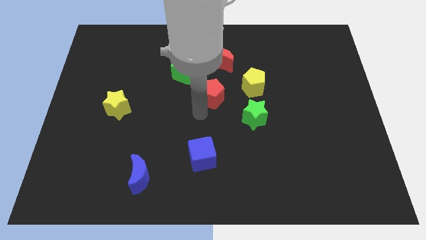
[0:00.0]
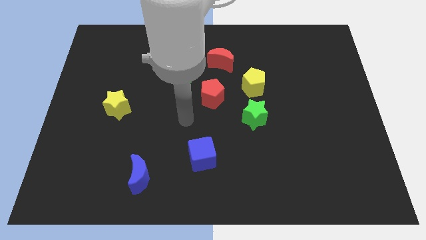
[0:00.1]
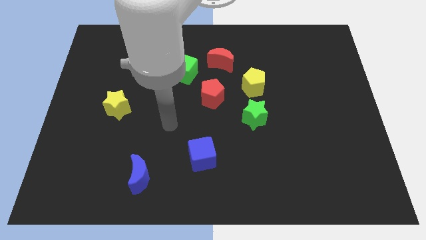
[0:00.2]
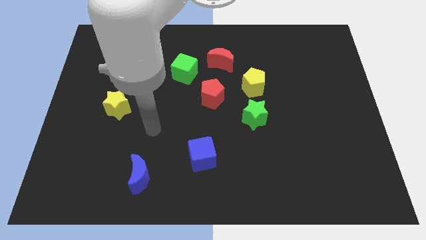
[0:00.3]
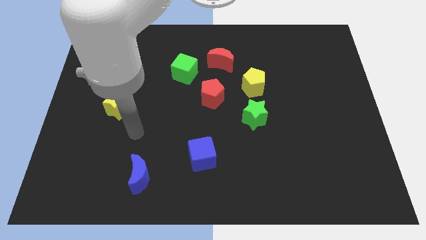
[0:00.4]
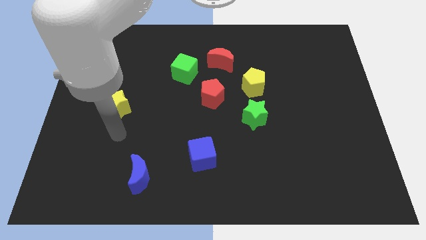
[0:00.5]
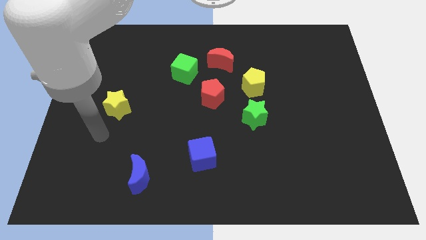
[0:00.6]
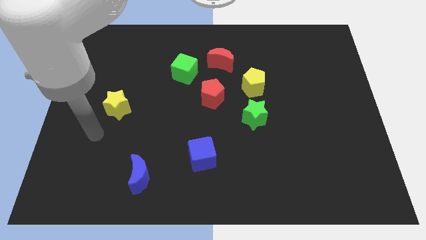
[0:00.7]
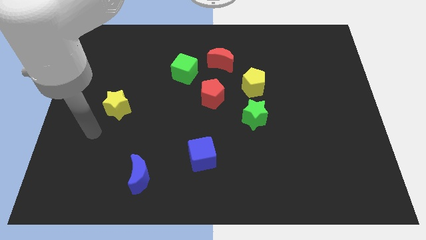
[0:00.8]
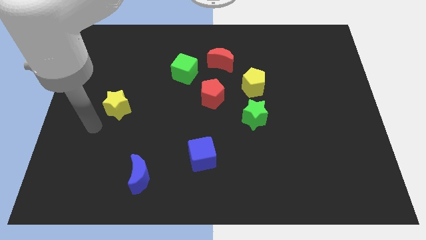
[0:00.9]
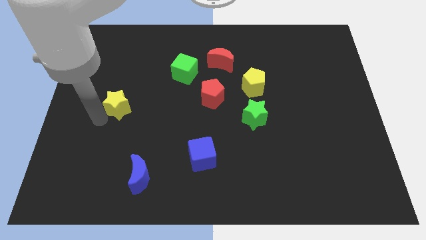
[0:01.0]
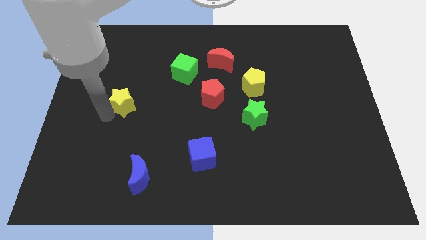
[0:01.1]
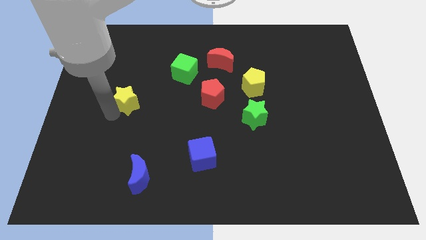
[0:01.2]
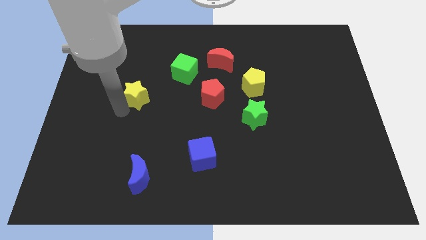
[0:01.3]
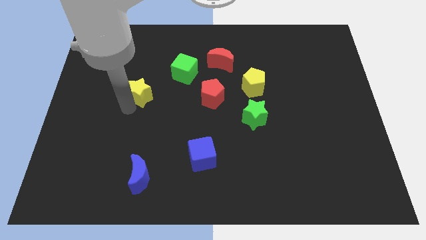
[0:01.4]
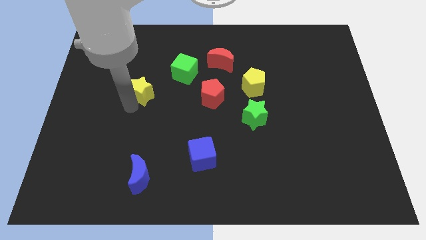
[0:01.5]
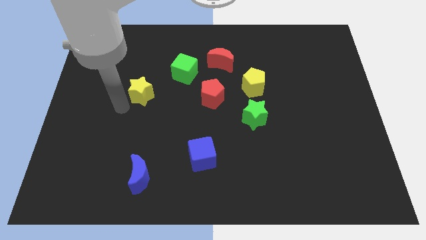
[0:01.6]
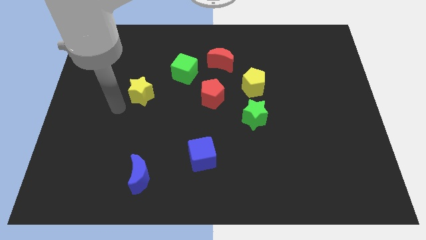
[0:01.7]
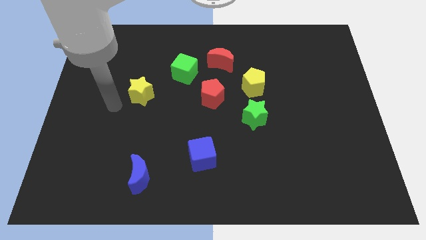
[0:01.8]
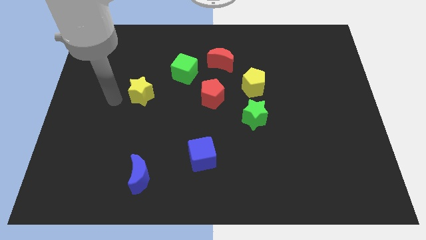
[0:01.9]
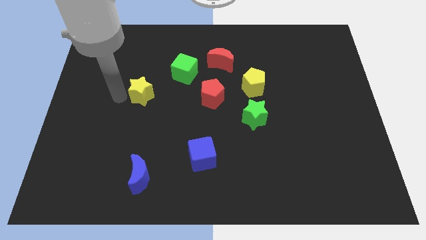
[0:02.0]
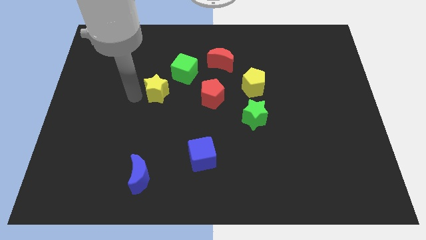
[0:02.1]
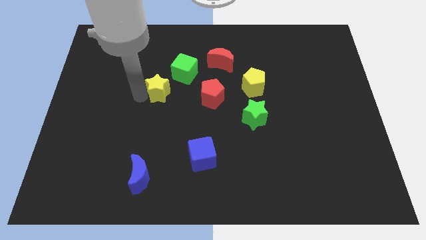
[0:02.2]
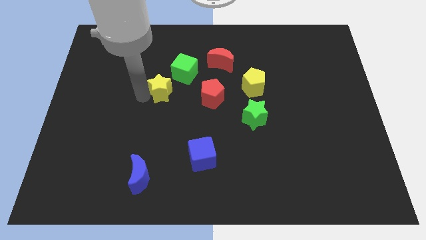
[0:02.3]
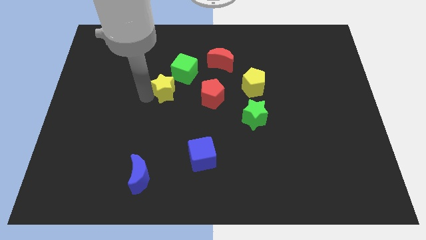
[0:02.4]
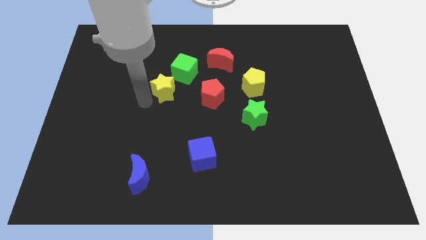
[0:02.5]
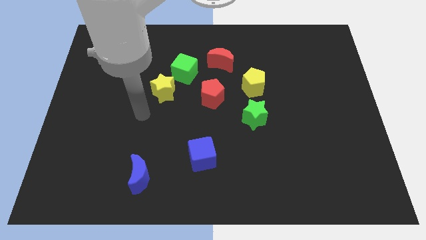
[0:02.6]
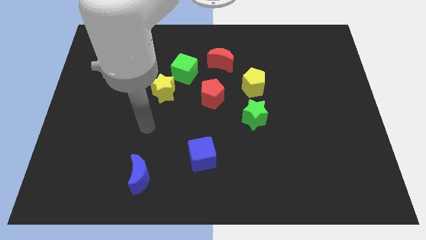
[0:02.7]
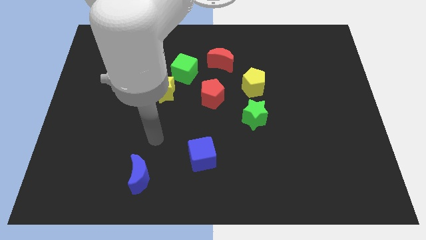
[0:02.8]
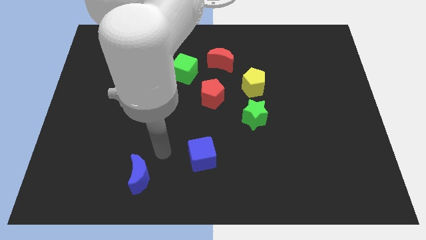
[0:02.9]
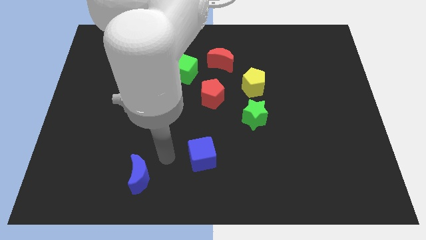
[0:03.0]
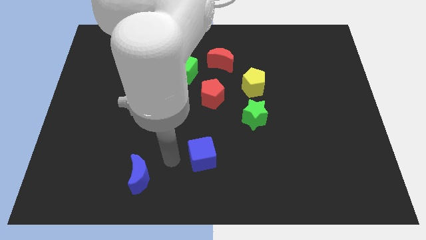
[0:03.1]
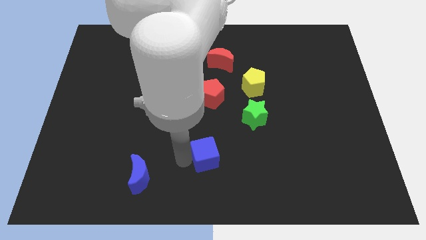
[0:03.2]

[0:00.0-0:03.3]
push the yellow star to the left bottom of the green cube

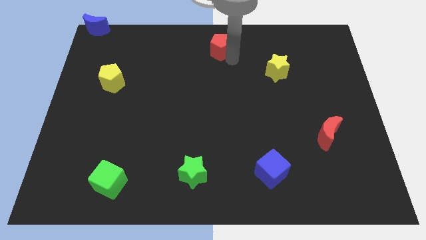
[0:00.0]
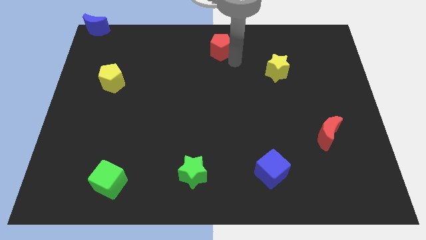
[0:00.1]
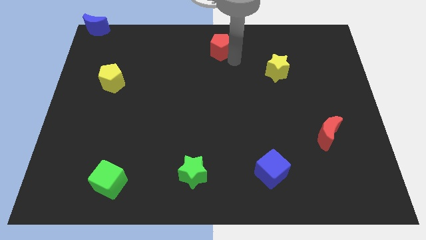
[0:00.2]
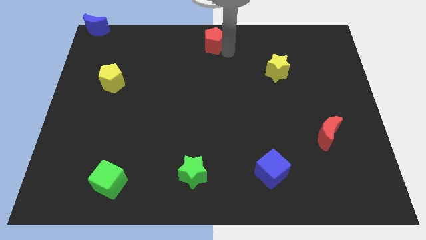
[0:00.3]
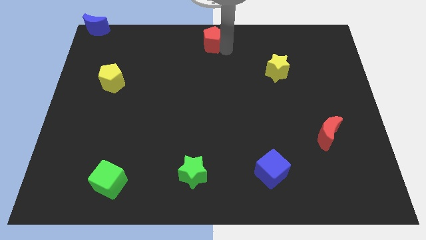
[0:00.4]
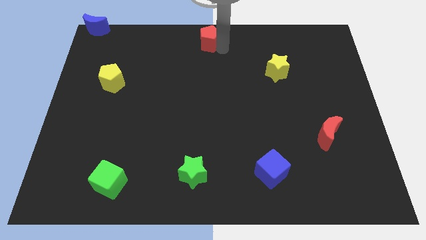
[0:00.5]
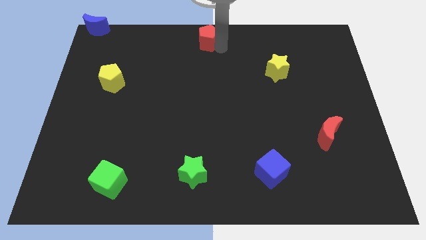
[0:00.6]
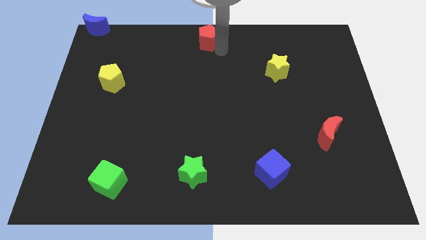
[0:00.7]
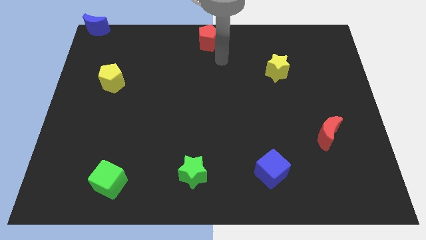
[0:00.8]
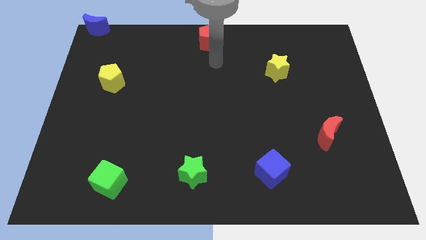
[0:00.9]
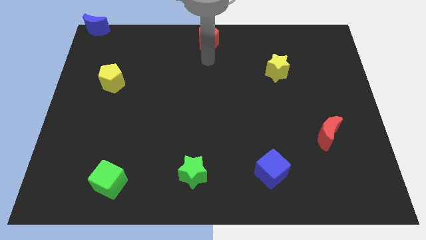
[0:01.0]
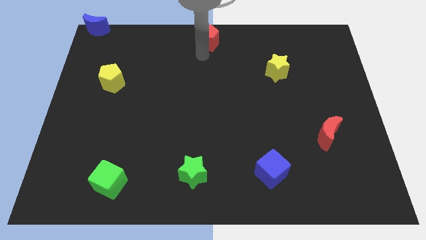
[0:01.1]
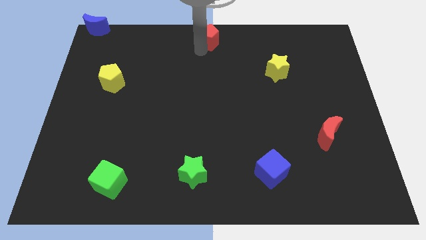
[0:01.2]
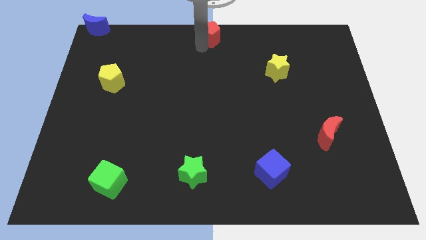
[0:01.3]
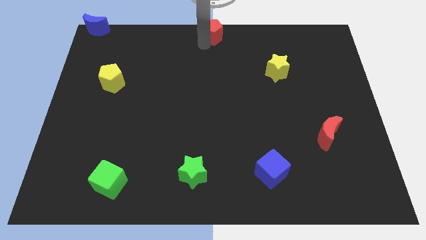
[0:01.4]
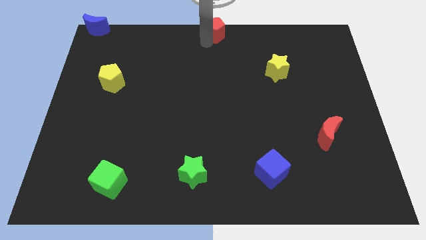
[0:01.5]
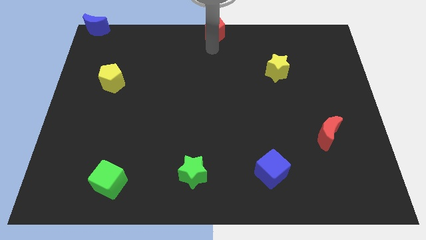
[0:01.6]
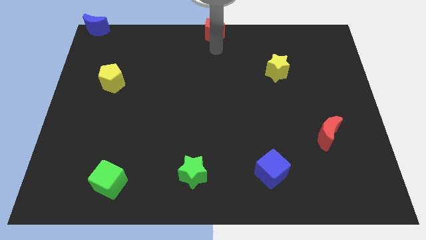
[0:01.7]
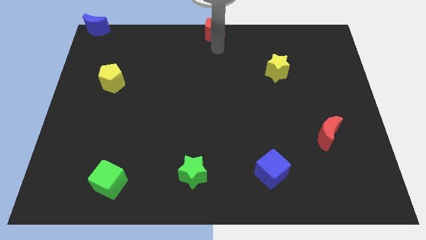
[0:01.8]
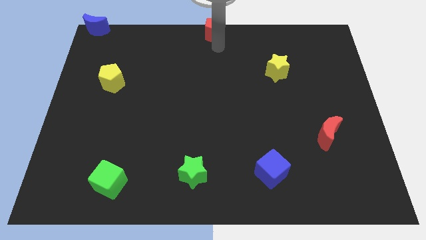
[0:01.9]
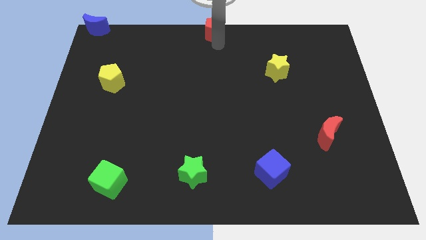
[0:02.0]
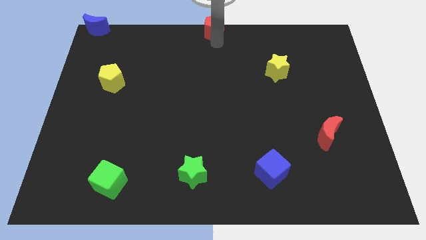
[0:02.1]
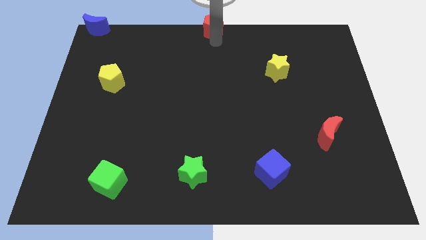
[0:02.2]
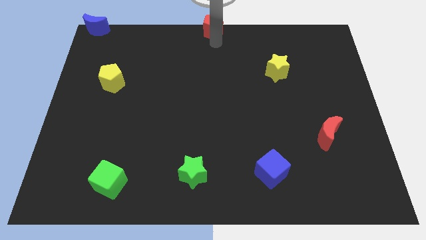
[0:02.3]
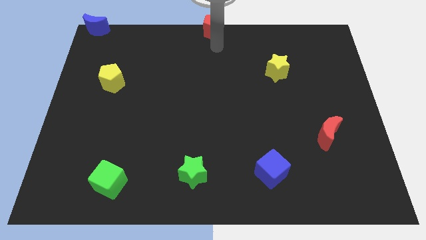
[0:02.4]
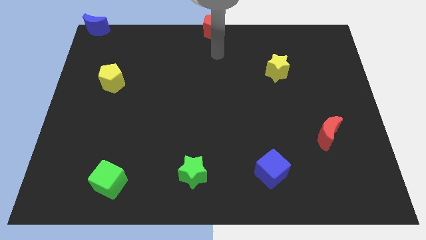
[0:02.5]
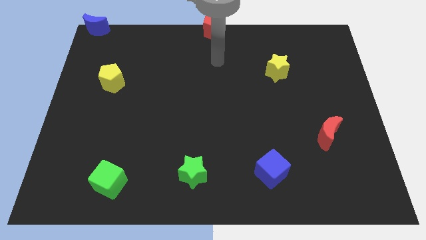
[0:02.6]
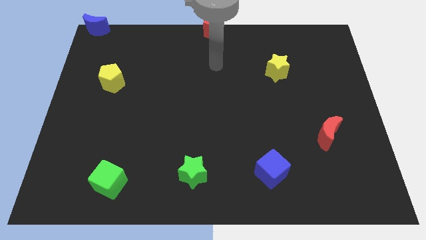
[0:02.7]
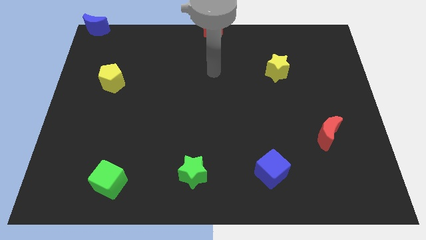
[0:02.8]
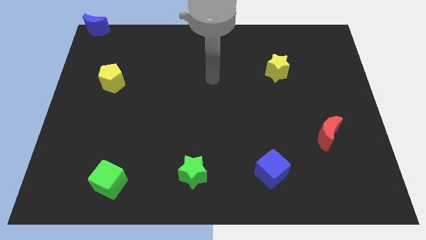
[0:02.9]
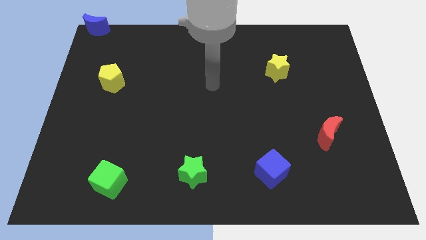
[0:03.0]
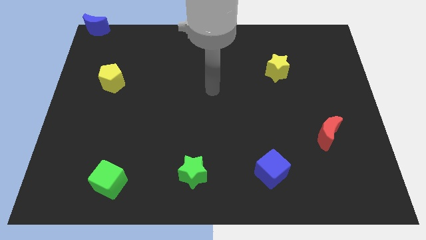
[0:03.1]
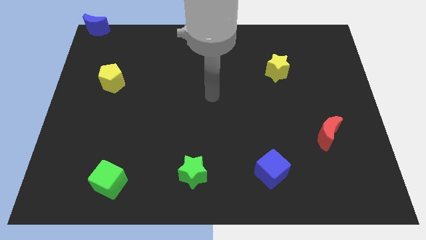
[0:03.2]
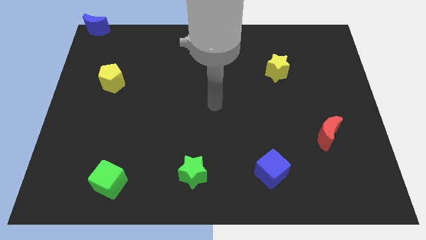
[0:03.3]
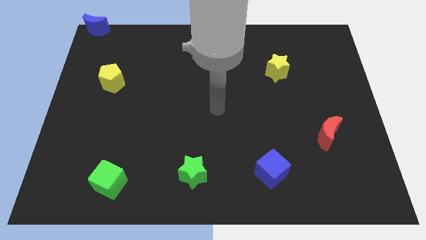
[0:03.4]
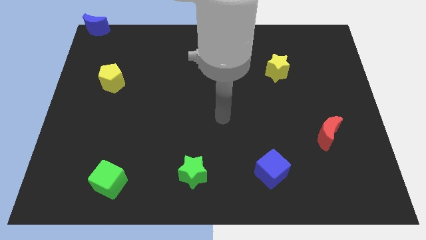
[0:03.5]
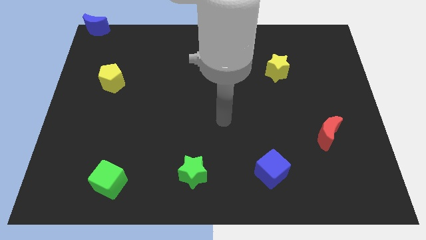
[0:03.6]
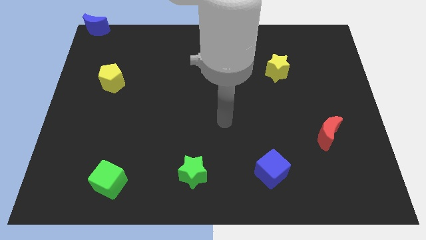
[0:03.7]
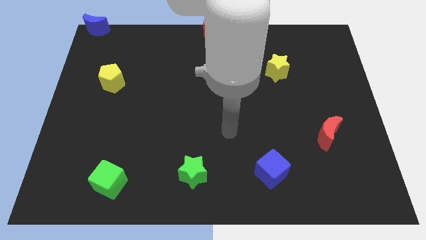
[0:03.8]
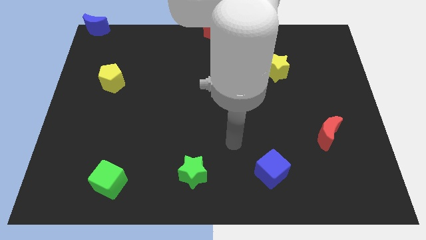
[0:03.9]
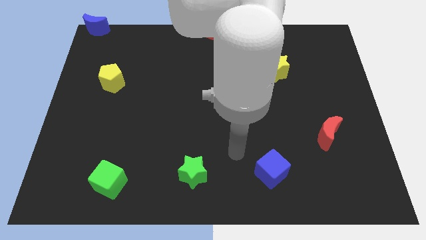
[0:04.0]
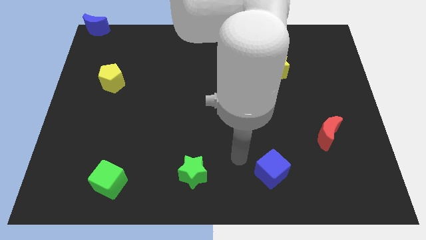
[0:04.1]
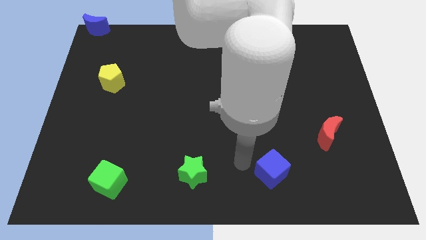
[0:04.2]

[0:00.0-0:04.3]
place your arm to the left of blue cube

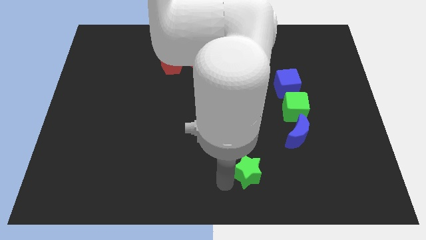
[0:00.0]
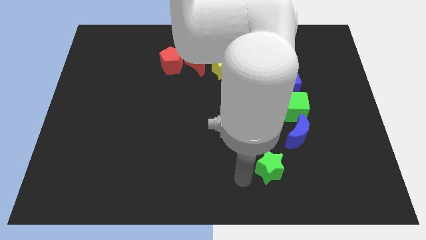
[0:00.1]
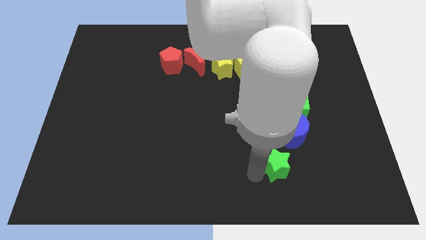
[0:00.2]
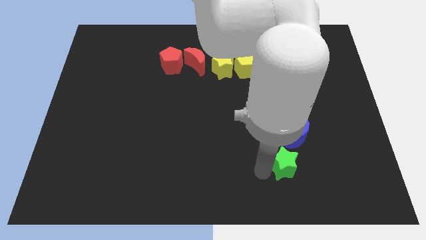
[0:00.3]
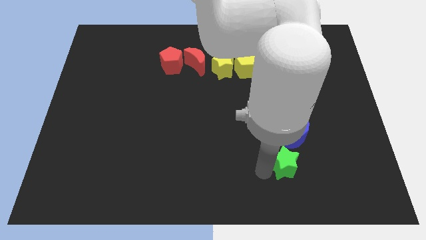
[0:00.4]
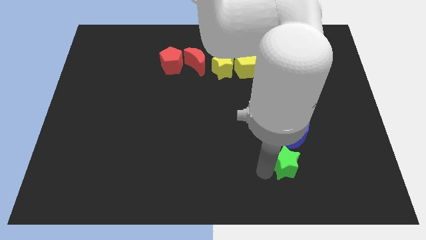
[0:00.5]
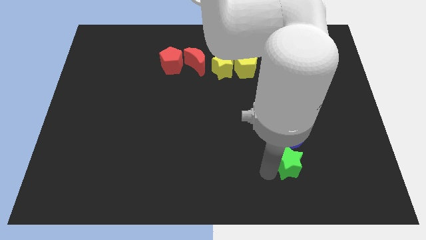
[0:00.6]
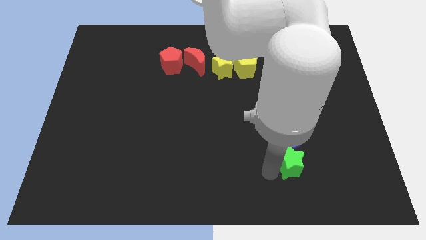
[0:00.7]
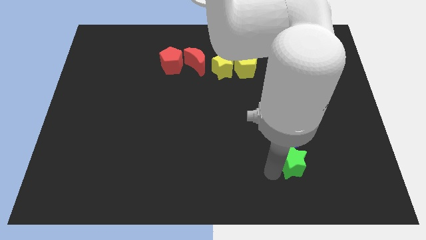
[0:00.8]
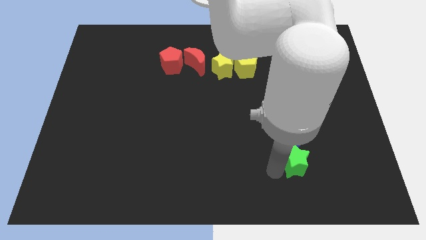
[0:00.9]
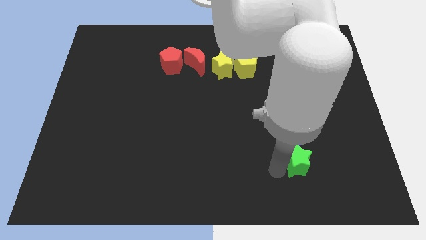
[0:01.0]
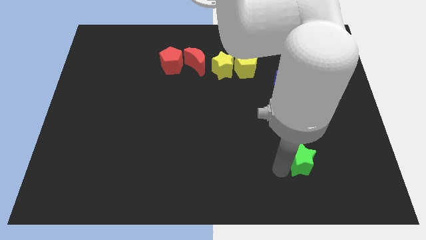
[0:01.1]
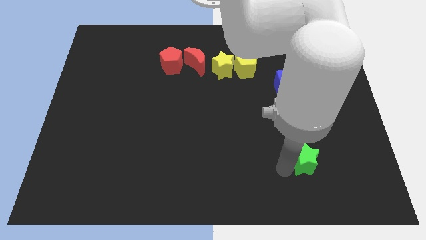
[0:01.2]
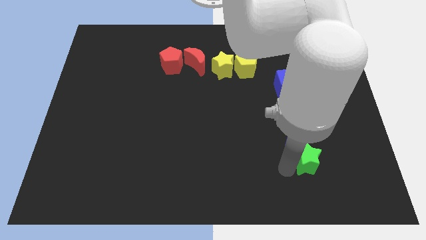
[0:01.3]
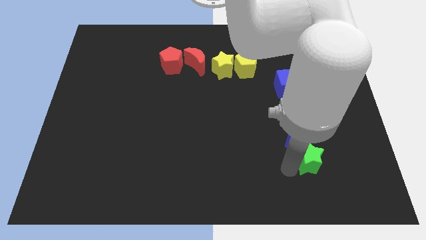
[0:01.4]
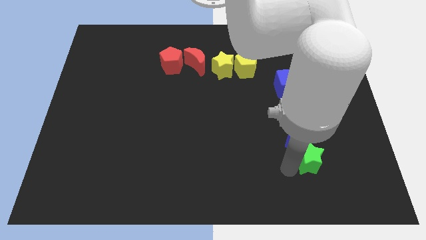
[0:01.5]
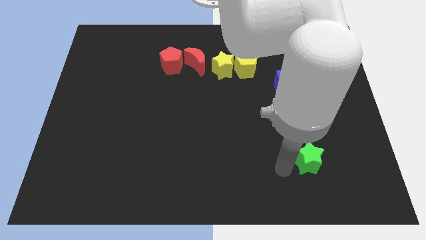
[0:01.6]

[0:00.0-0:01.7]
place the green star to the bottom of blue crescent
